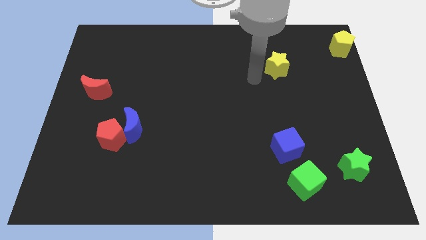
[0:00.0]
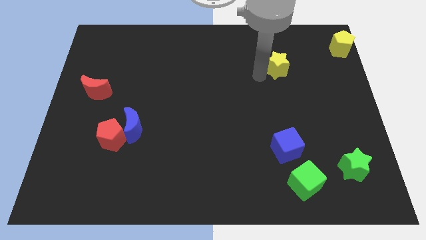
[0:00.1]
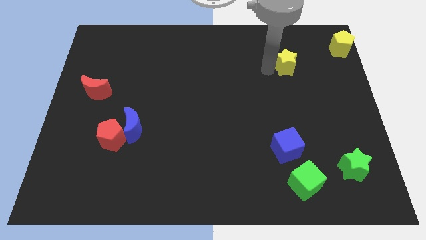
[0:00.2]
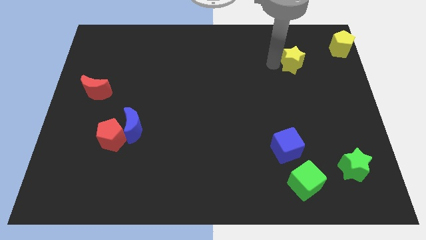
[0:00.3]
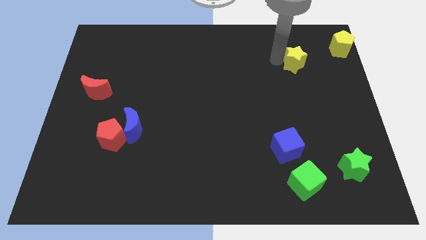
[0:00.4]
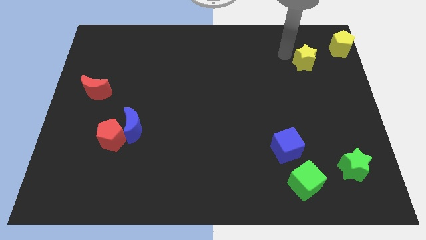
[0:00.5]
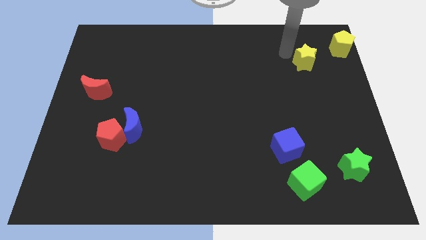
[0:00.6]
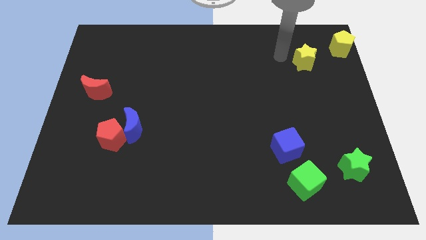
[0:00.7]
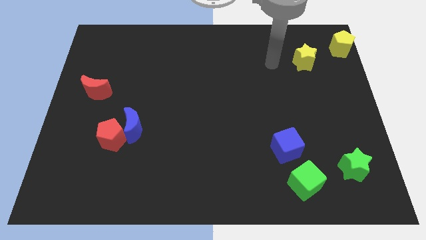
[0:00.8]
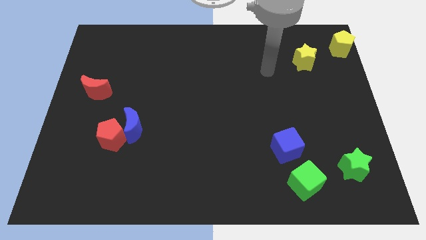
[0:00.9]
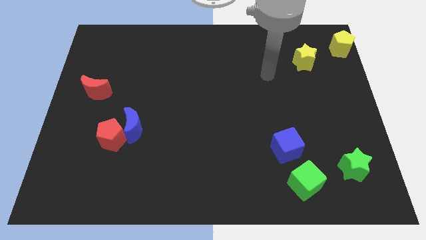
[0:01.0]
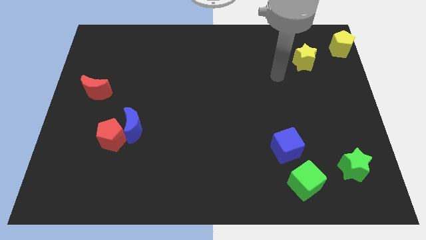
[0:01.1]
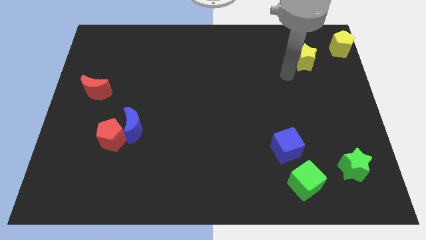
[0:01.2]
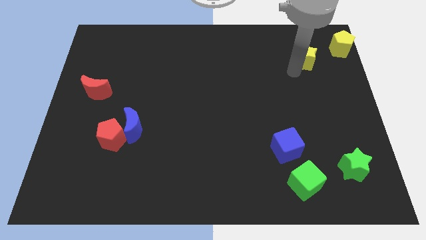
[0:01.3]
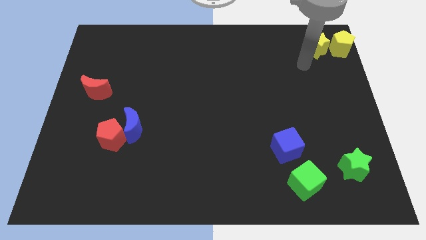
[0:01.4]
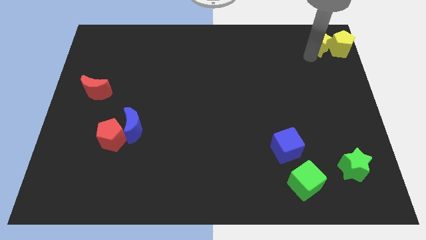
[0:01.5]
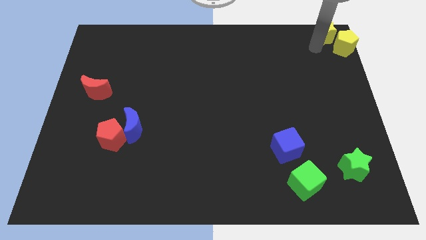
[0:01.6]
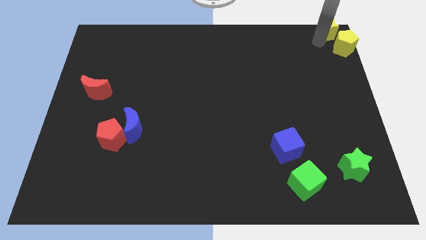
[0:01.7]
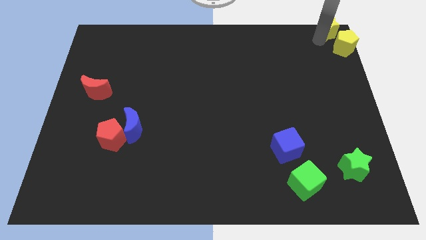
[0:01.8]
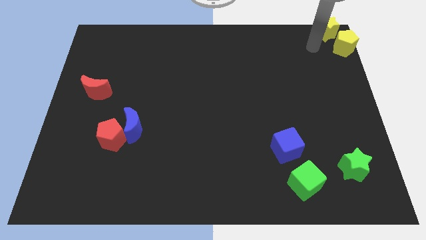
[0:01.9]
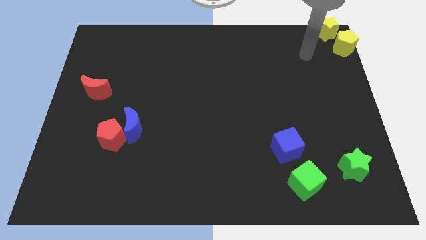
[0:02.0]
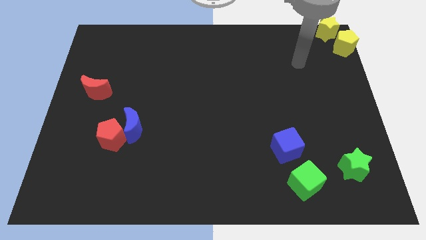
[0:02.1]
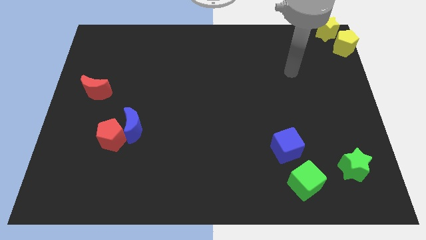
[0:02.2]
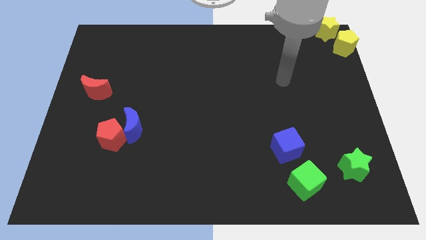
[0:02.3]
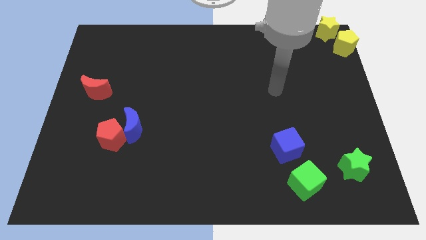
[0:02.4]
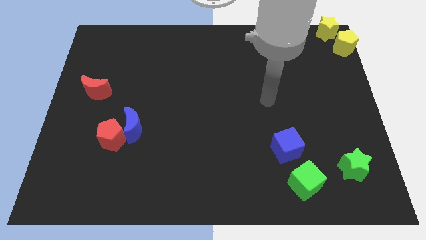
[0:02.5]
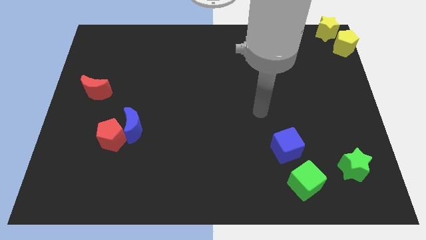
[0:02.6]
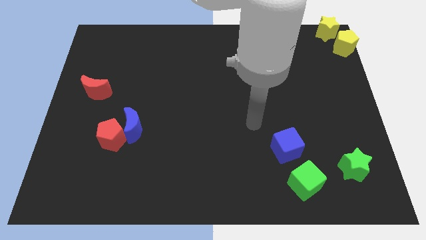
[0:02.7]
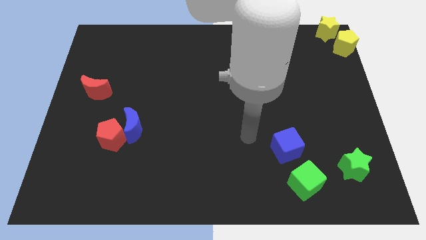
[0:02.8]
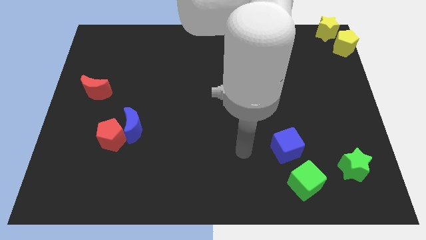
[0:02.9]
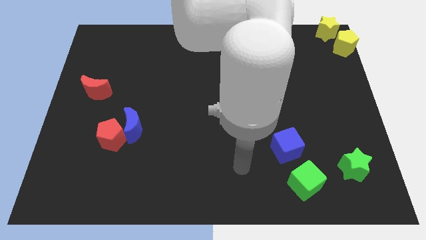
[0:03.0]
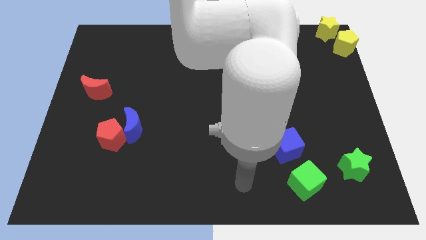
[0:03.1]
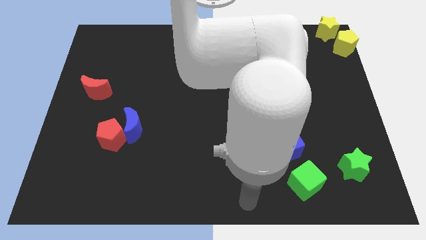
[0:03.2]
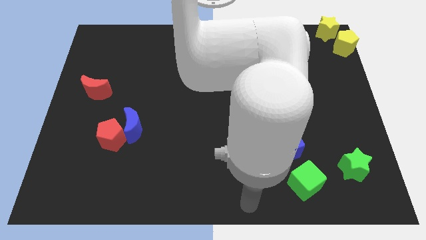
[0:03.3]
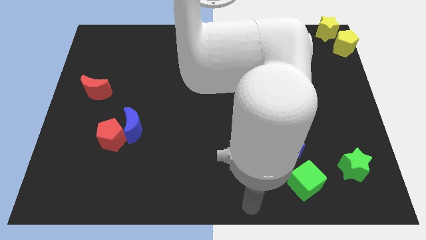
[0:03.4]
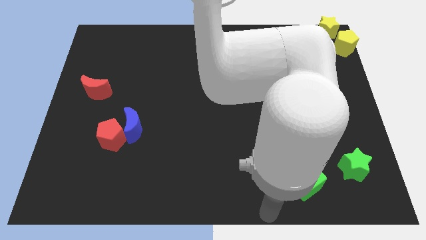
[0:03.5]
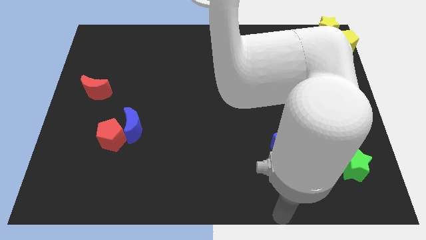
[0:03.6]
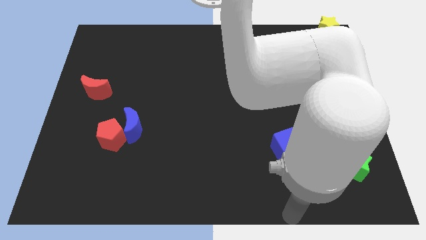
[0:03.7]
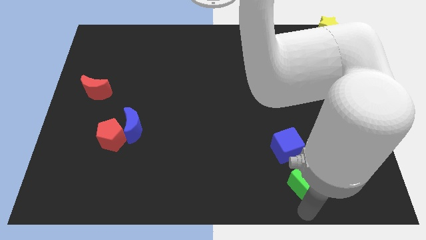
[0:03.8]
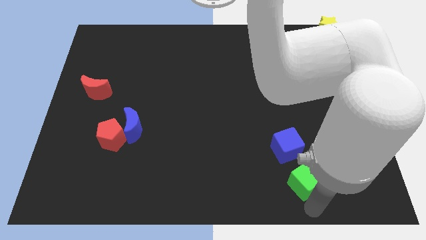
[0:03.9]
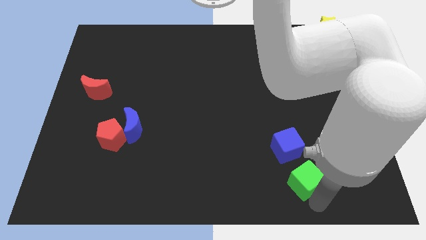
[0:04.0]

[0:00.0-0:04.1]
push the yellow star into the yellow pentagon

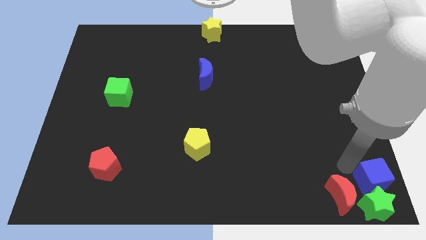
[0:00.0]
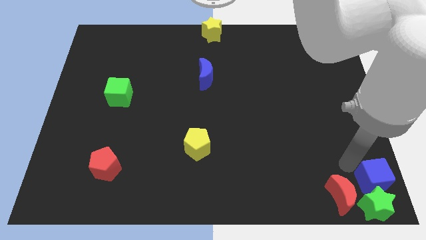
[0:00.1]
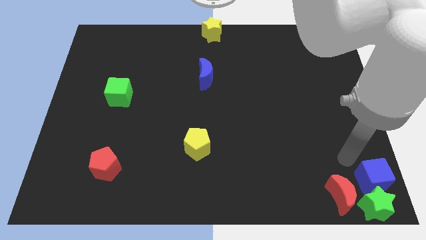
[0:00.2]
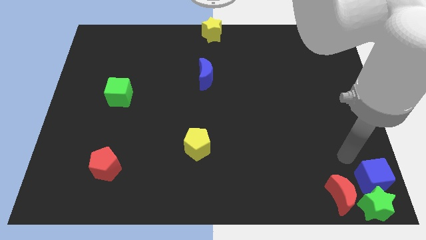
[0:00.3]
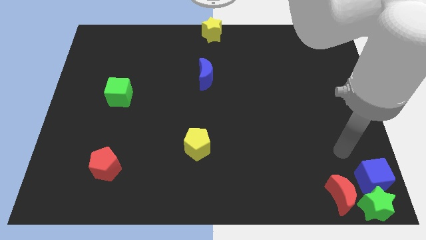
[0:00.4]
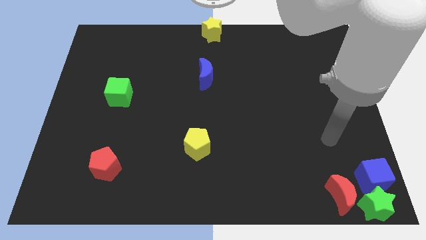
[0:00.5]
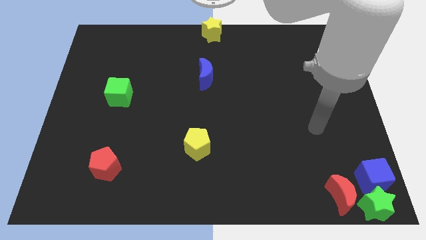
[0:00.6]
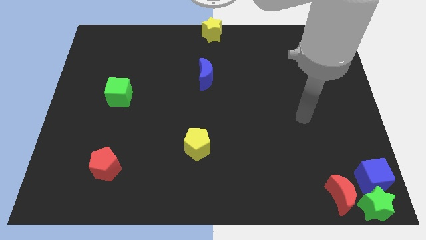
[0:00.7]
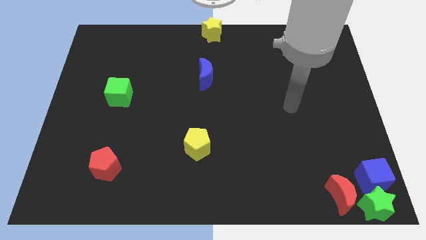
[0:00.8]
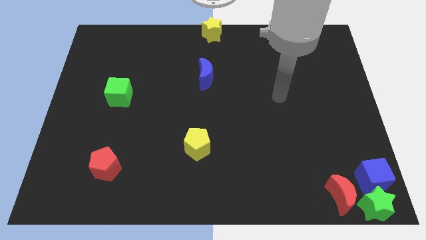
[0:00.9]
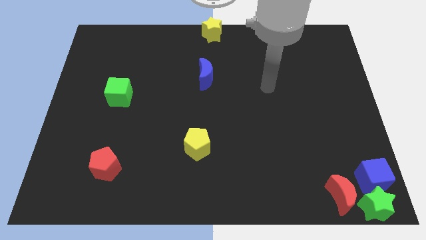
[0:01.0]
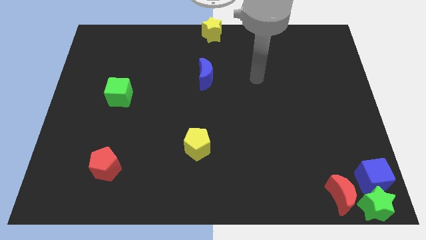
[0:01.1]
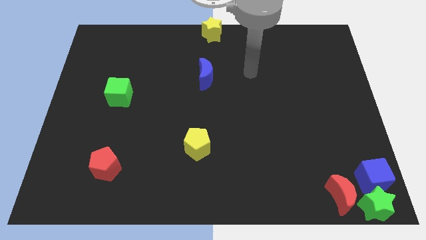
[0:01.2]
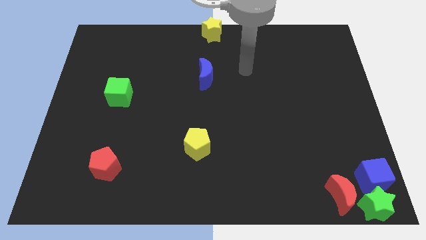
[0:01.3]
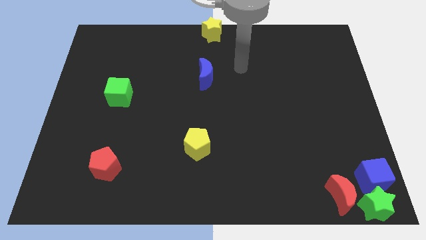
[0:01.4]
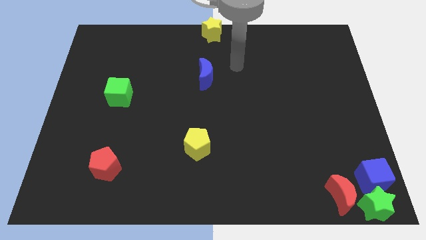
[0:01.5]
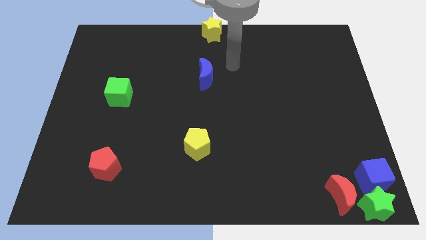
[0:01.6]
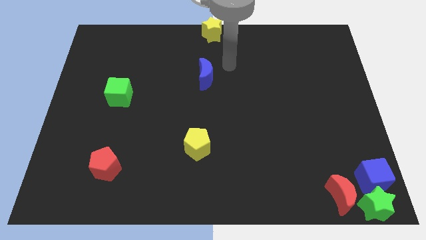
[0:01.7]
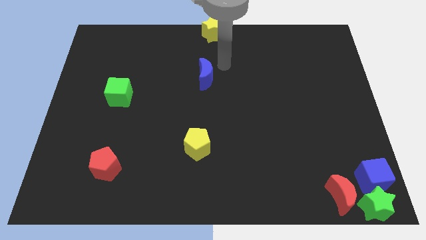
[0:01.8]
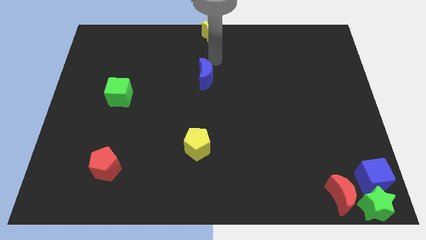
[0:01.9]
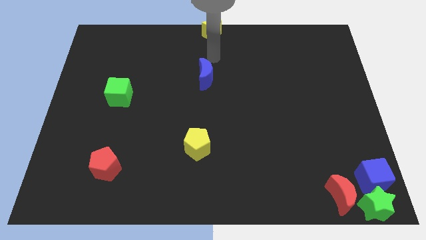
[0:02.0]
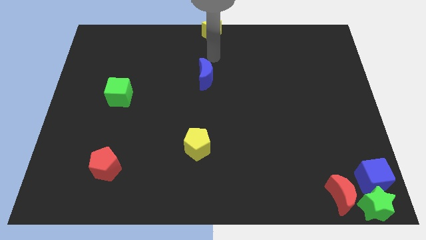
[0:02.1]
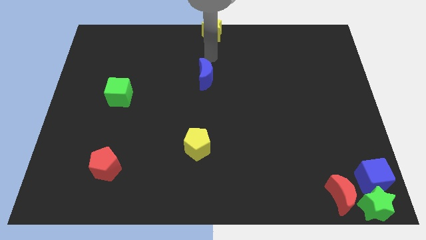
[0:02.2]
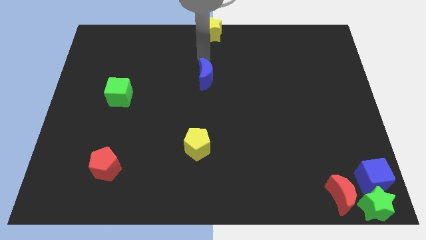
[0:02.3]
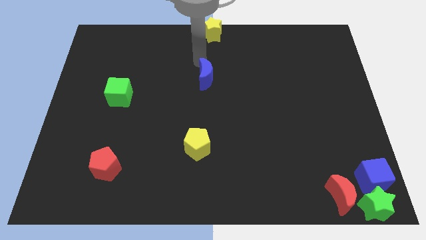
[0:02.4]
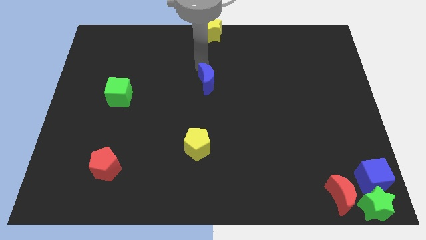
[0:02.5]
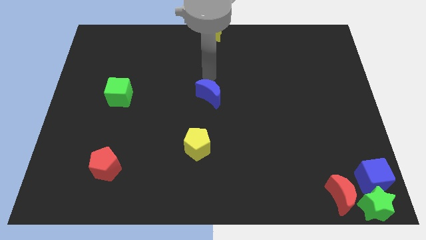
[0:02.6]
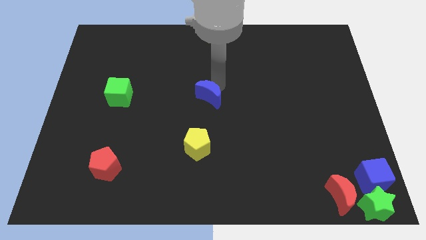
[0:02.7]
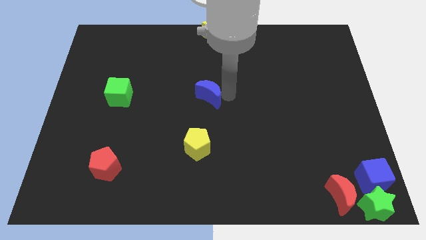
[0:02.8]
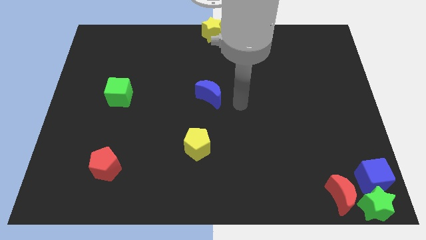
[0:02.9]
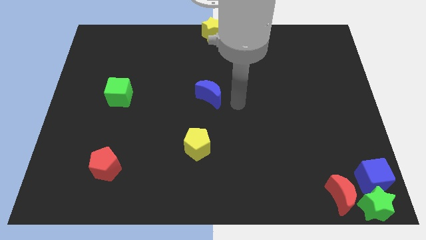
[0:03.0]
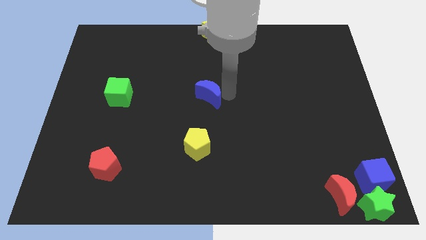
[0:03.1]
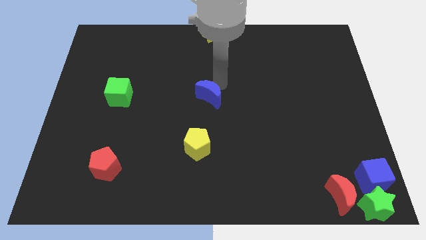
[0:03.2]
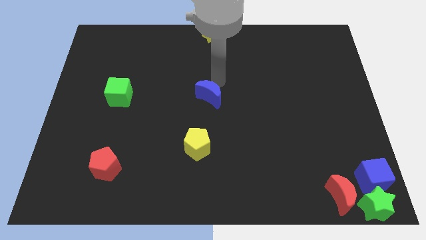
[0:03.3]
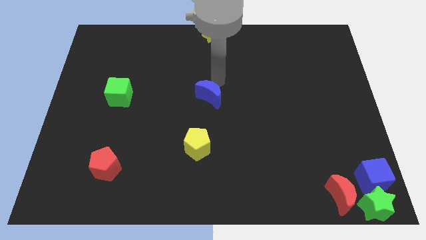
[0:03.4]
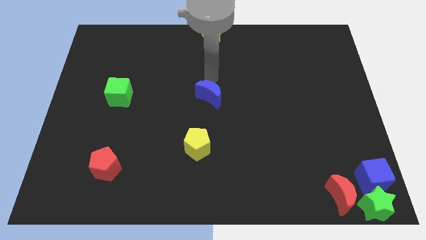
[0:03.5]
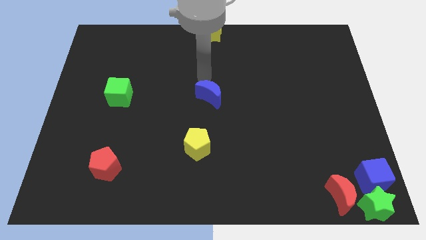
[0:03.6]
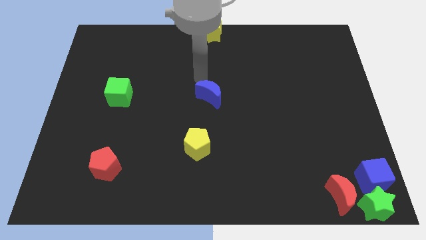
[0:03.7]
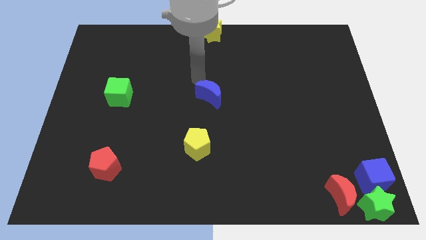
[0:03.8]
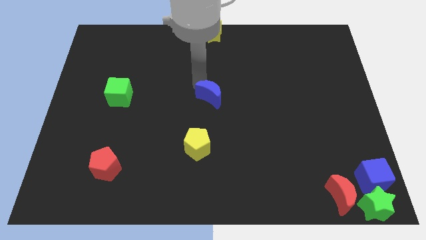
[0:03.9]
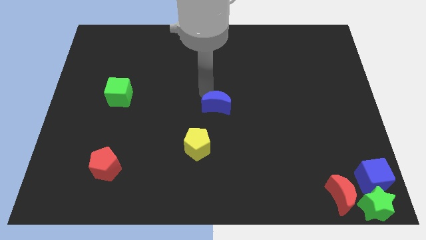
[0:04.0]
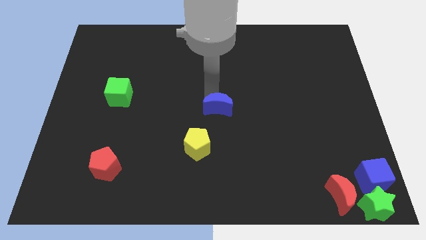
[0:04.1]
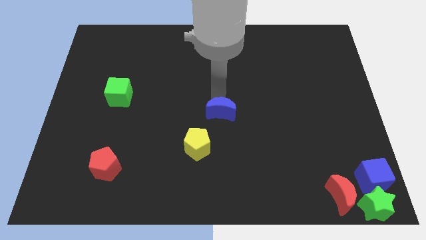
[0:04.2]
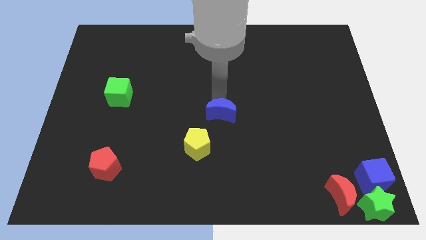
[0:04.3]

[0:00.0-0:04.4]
move the blue moon top right above the yellow pentagon

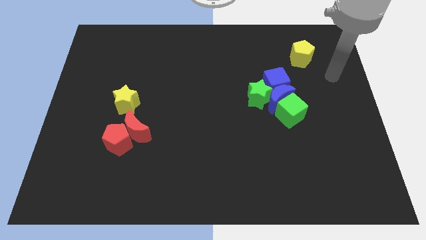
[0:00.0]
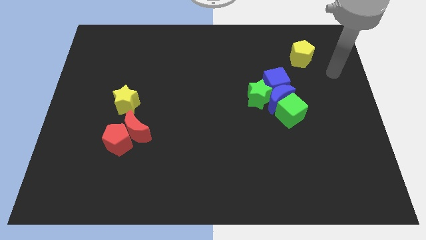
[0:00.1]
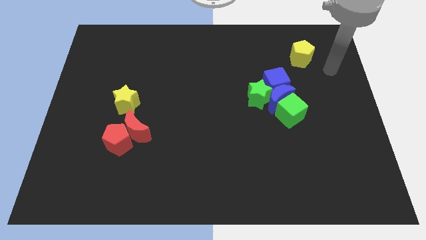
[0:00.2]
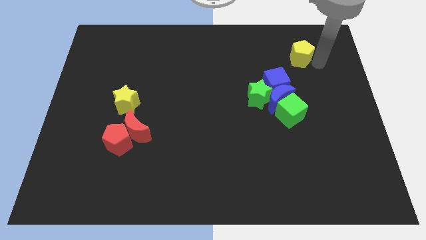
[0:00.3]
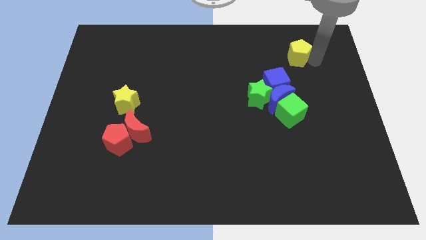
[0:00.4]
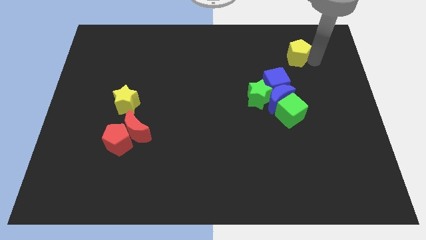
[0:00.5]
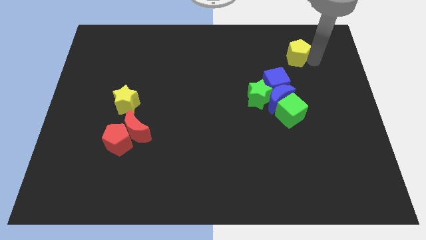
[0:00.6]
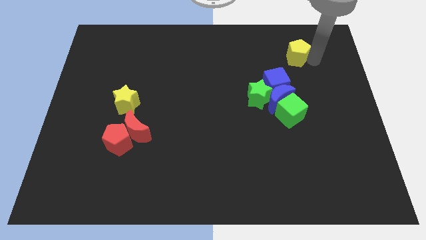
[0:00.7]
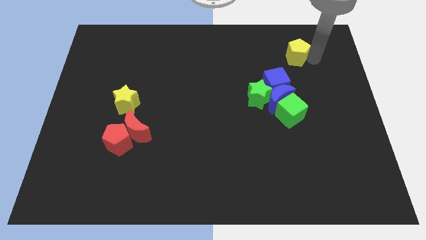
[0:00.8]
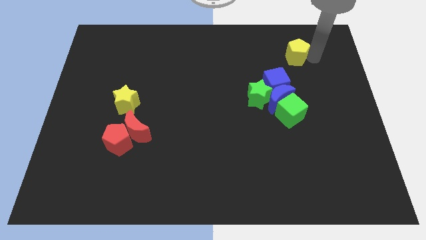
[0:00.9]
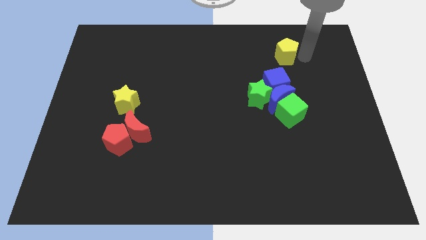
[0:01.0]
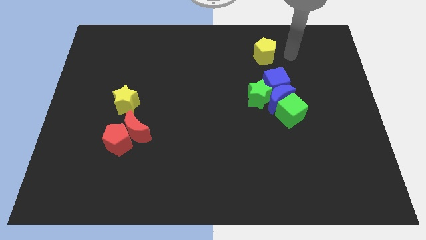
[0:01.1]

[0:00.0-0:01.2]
push the yellow pentagon above the blue cube
